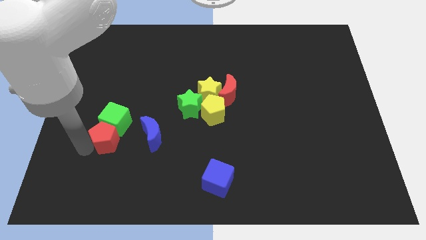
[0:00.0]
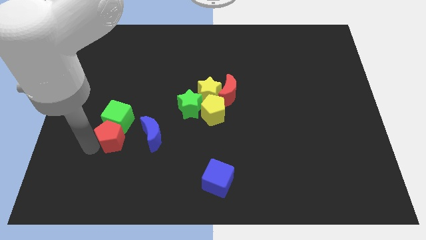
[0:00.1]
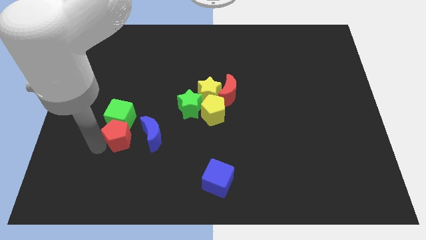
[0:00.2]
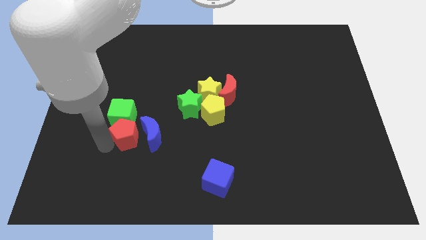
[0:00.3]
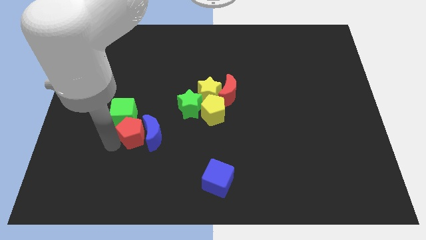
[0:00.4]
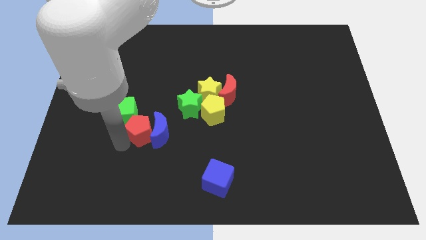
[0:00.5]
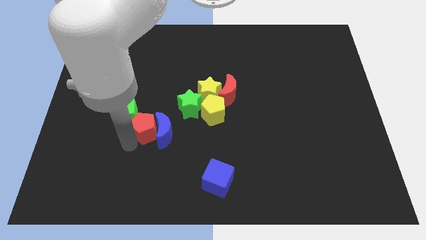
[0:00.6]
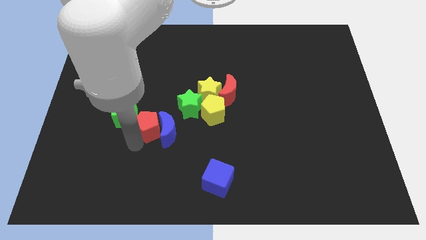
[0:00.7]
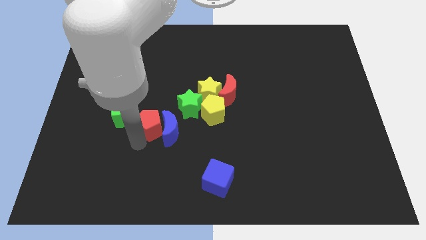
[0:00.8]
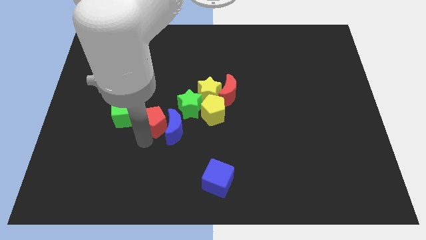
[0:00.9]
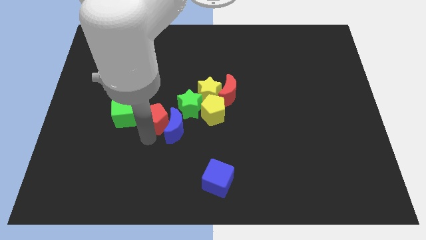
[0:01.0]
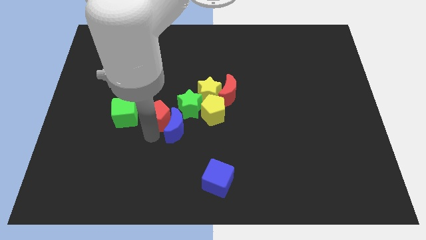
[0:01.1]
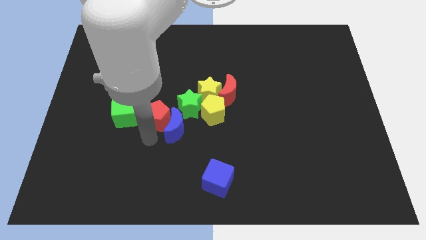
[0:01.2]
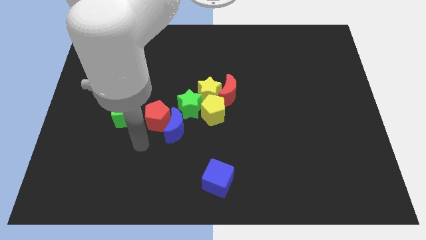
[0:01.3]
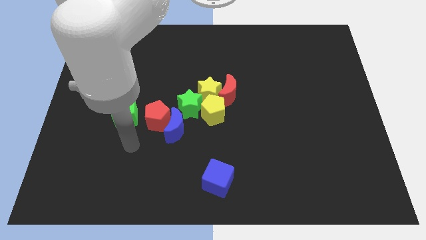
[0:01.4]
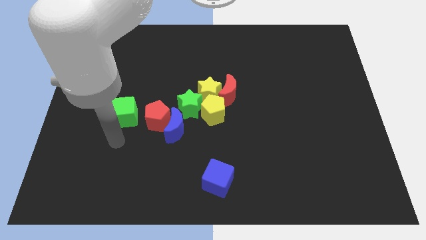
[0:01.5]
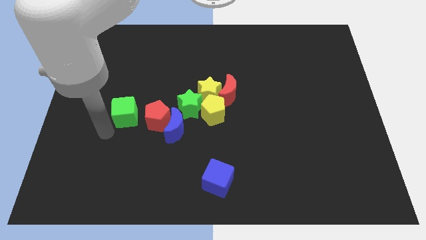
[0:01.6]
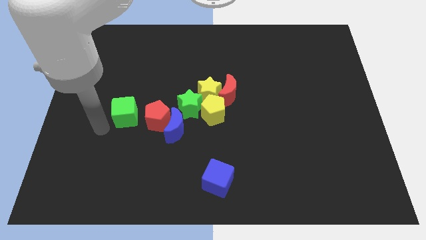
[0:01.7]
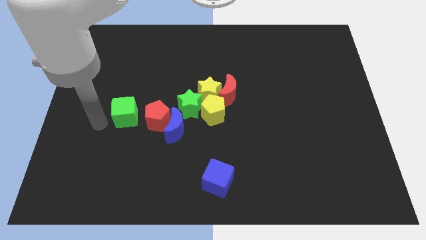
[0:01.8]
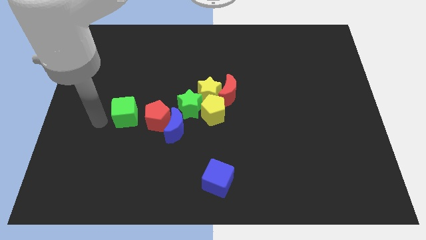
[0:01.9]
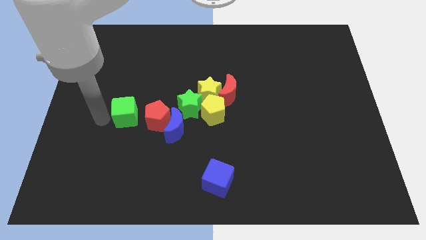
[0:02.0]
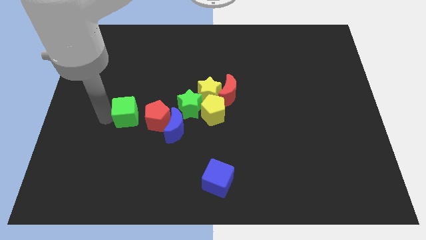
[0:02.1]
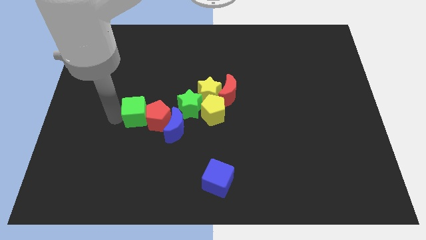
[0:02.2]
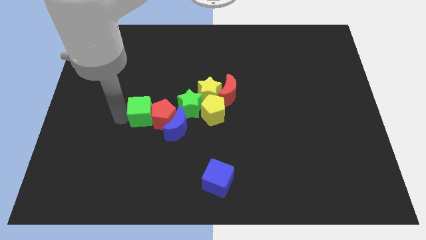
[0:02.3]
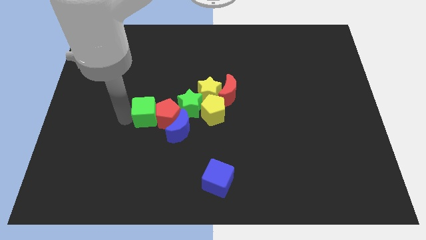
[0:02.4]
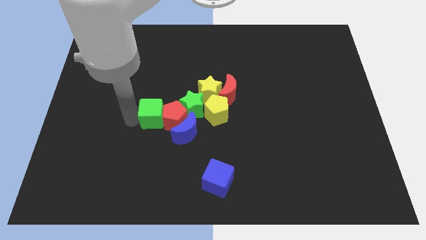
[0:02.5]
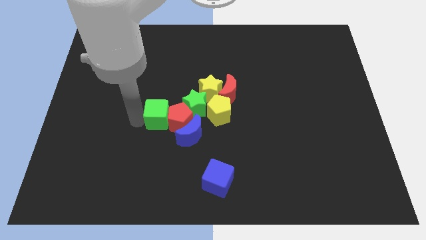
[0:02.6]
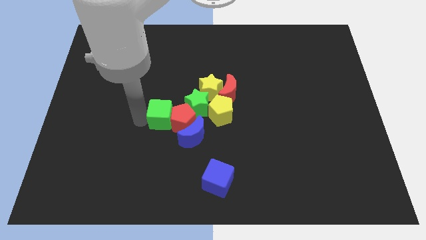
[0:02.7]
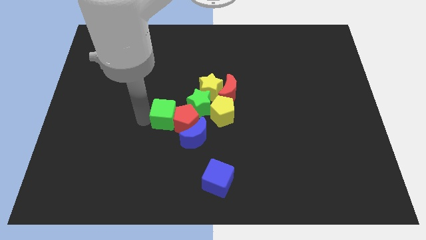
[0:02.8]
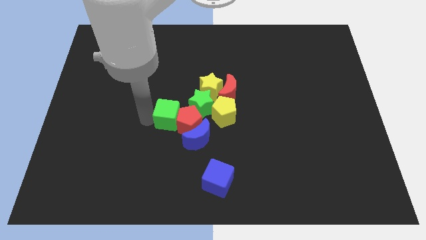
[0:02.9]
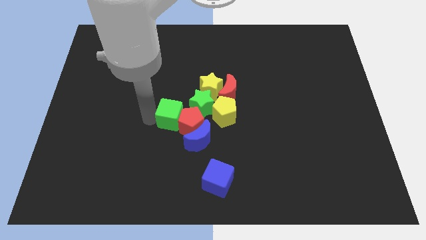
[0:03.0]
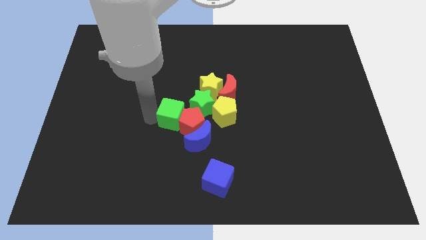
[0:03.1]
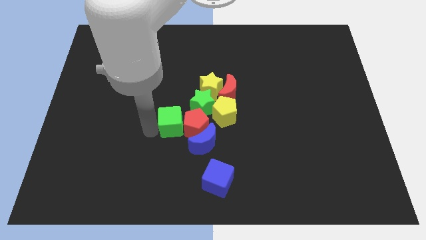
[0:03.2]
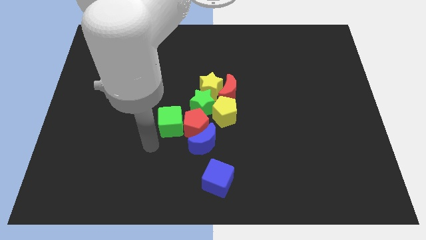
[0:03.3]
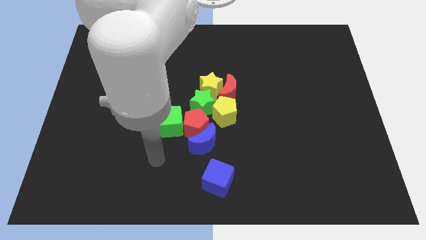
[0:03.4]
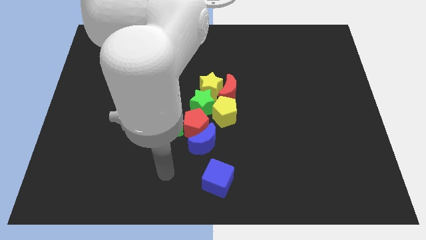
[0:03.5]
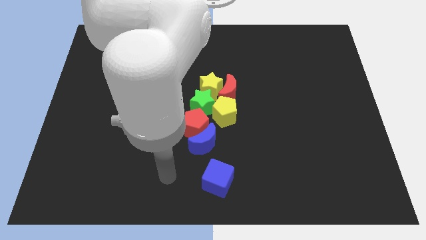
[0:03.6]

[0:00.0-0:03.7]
move the green cube red pentagon and into the group of blocks

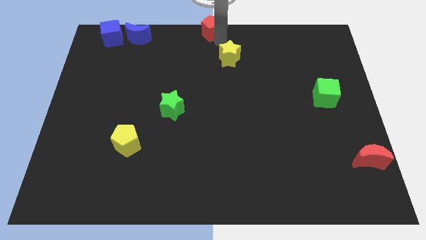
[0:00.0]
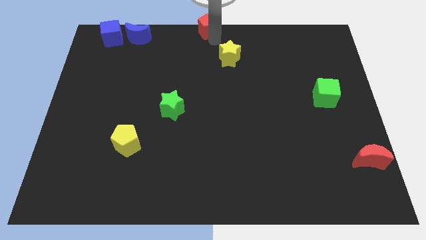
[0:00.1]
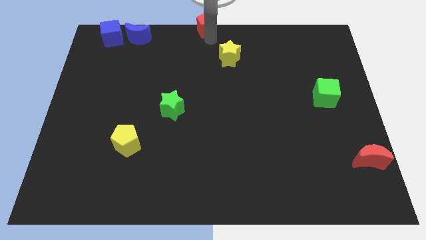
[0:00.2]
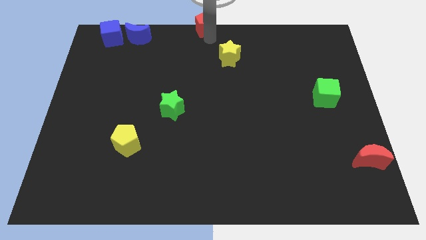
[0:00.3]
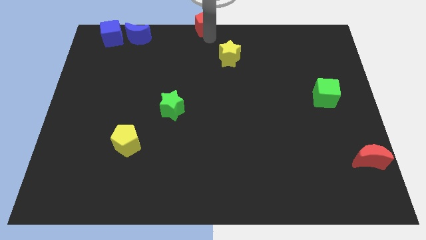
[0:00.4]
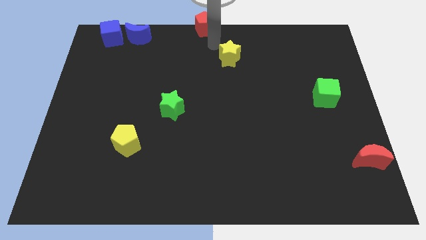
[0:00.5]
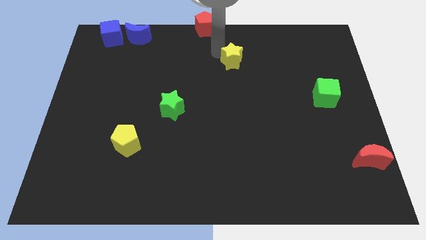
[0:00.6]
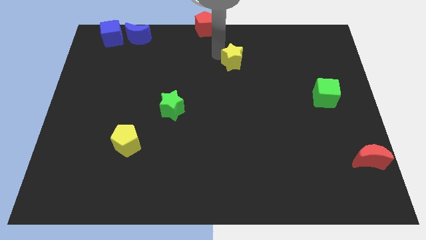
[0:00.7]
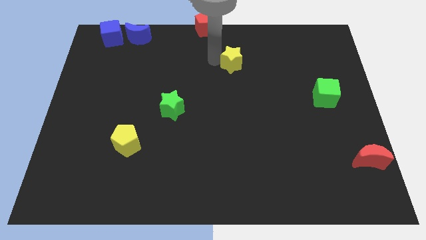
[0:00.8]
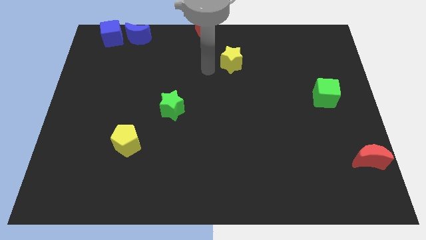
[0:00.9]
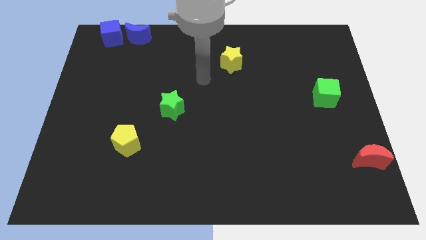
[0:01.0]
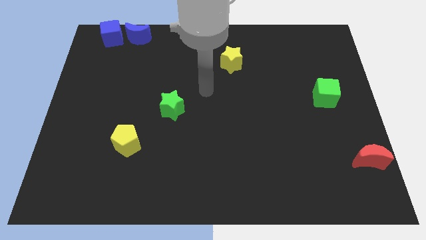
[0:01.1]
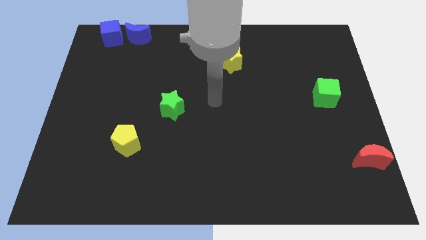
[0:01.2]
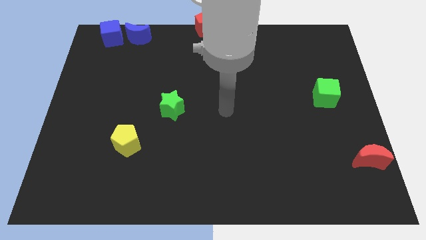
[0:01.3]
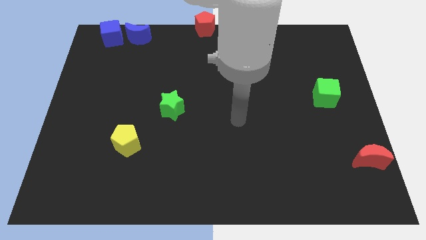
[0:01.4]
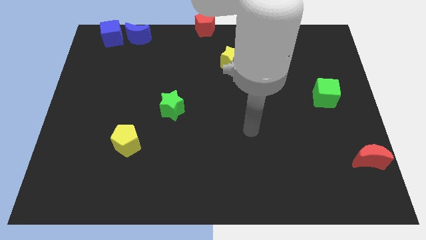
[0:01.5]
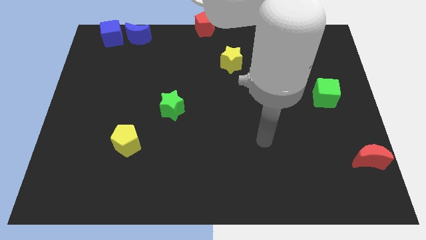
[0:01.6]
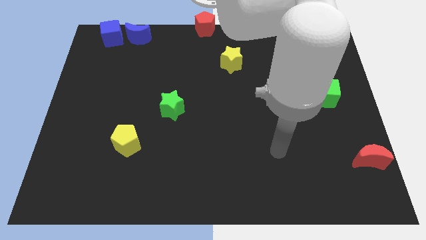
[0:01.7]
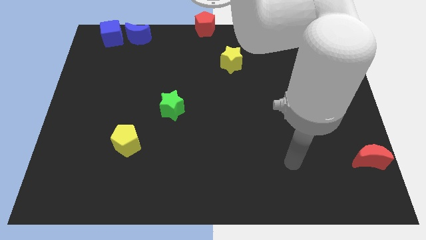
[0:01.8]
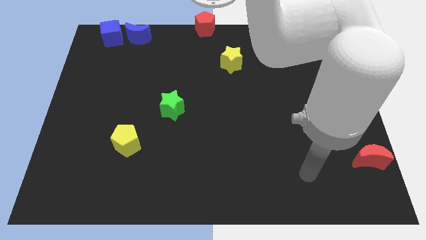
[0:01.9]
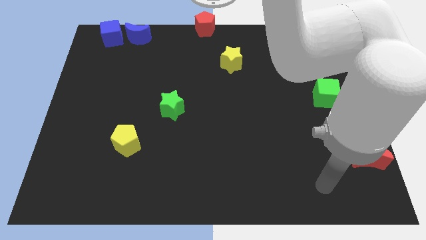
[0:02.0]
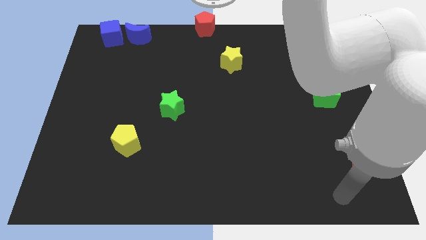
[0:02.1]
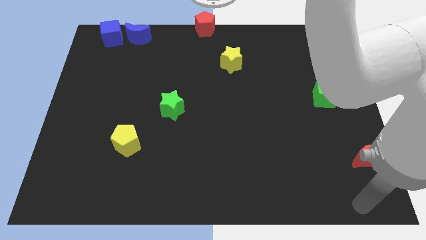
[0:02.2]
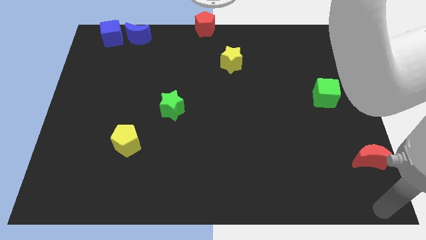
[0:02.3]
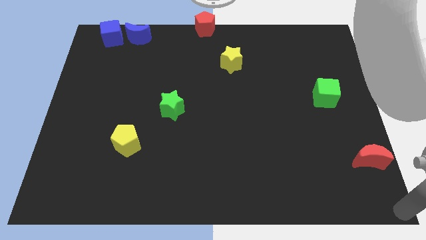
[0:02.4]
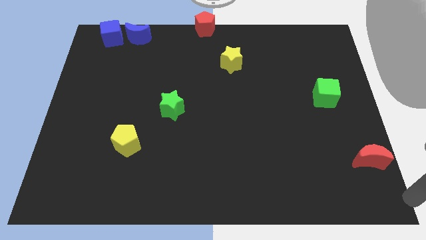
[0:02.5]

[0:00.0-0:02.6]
place arm at the bottom right corner

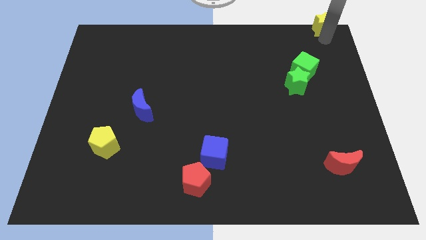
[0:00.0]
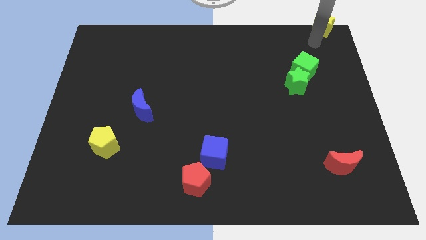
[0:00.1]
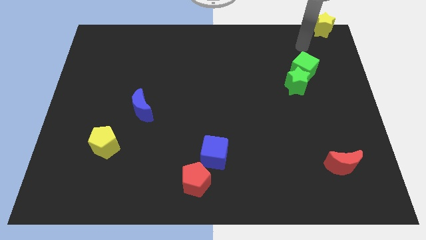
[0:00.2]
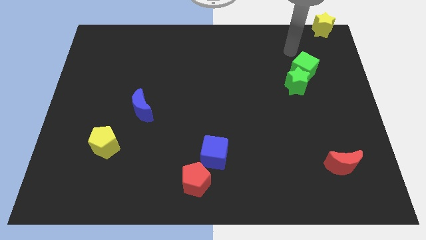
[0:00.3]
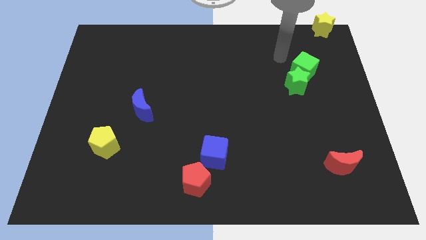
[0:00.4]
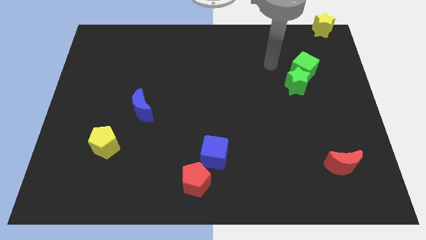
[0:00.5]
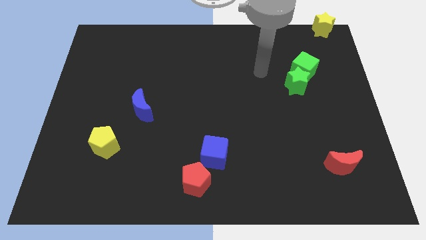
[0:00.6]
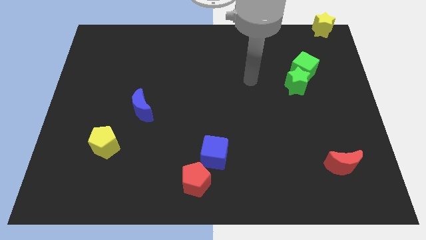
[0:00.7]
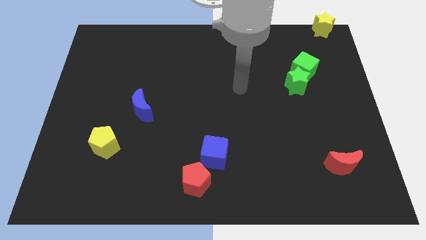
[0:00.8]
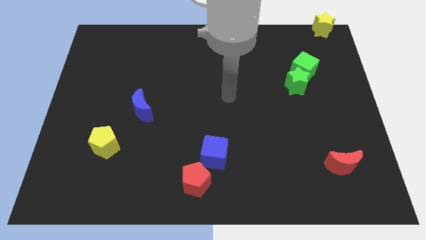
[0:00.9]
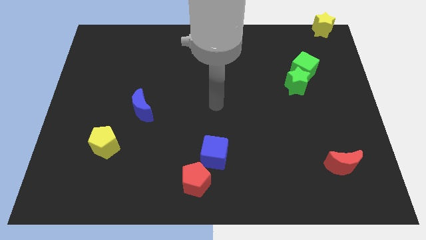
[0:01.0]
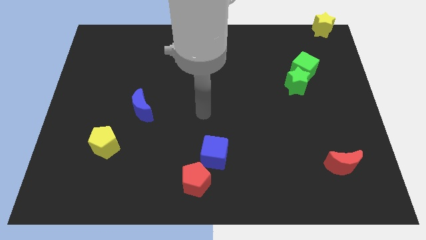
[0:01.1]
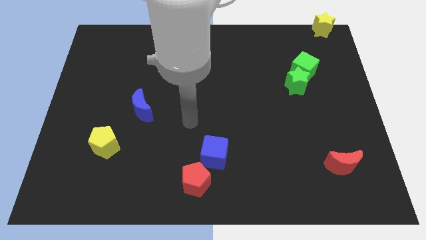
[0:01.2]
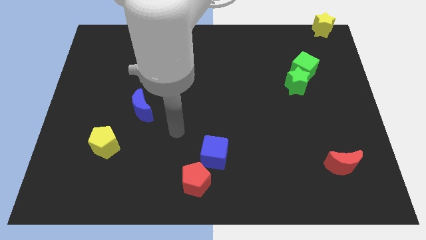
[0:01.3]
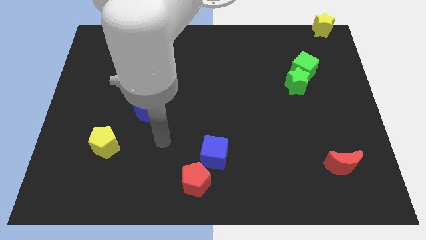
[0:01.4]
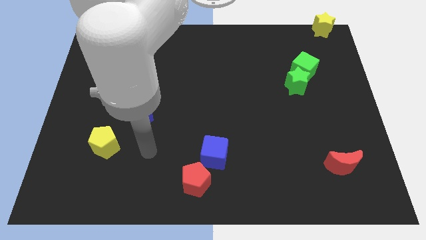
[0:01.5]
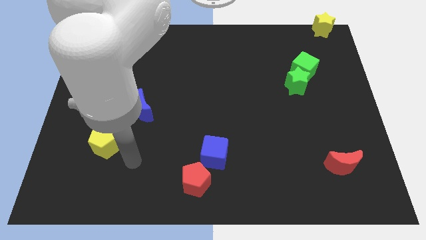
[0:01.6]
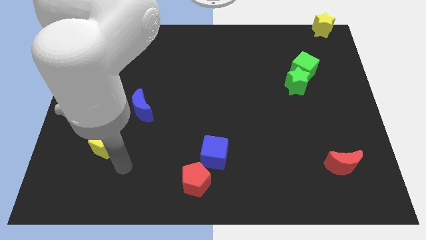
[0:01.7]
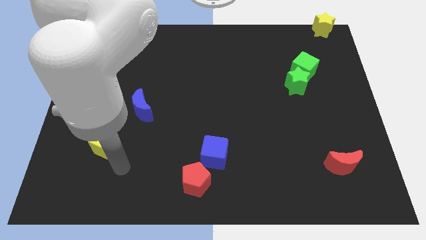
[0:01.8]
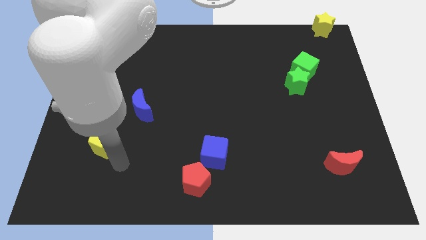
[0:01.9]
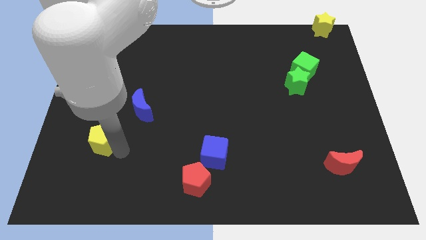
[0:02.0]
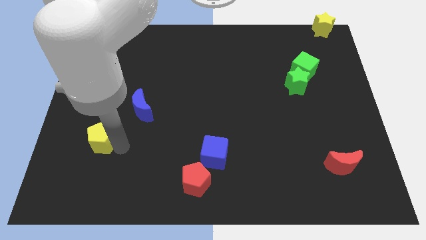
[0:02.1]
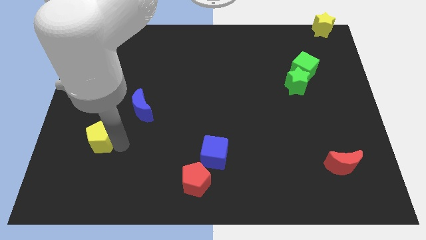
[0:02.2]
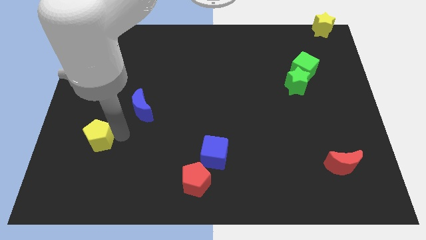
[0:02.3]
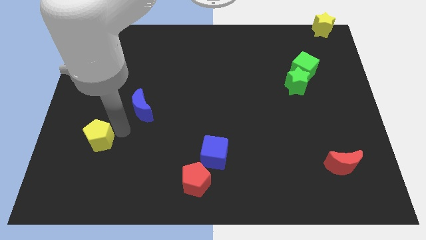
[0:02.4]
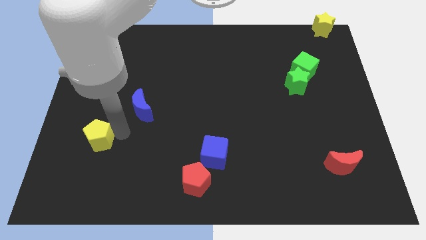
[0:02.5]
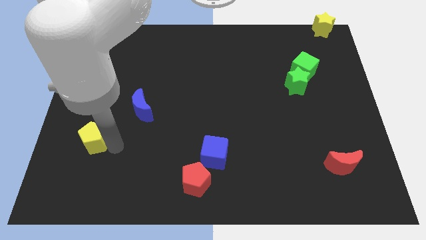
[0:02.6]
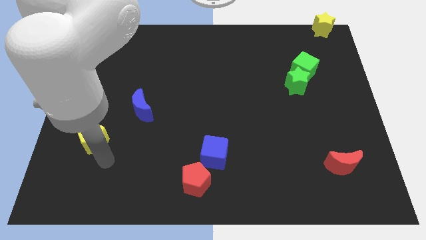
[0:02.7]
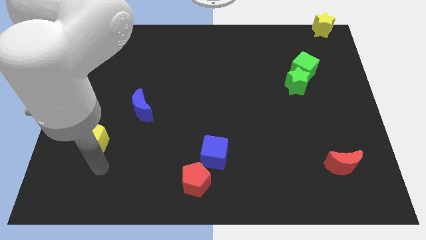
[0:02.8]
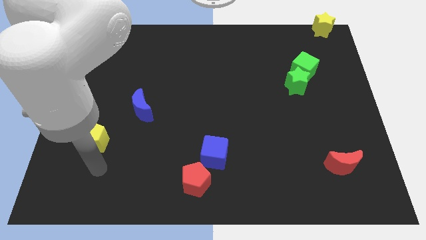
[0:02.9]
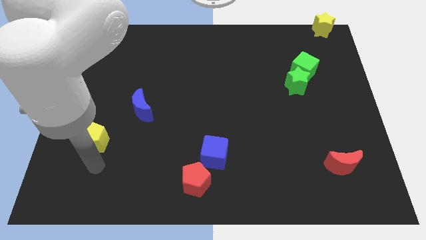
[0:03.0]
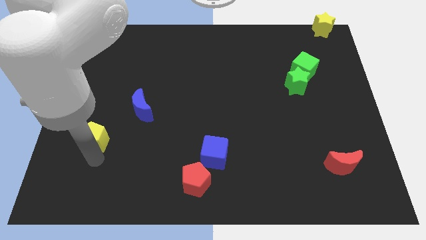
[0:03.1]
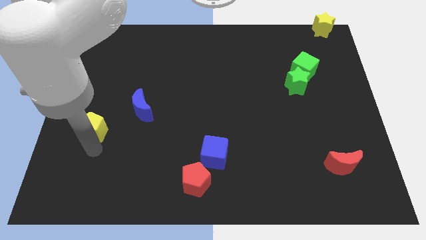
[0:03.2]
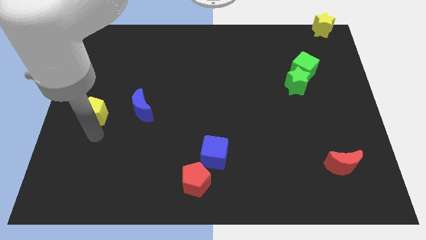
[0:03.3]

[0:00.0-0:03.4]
move the yellow pentagon to the left side of the blue moon
